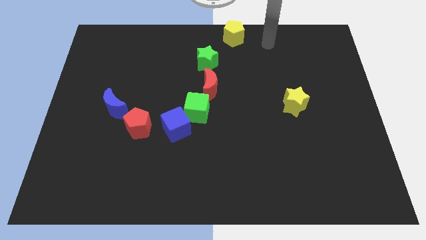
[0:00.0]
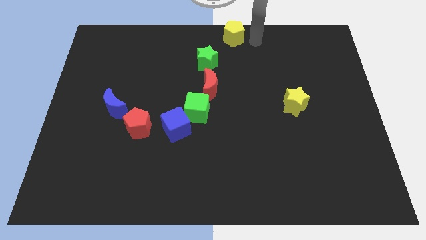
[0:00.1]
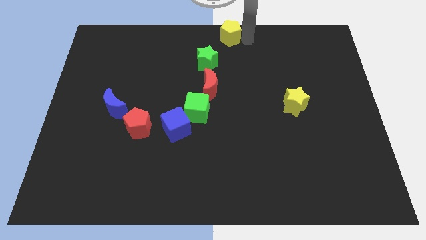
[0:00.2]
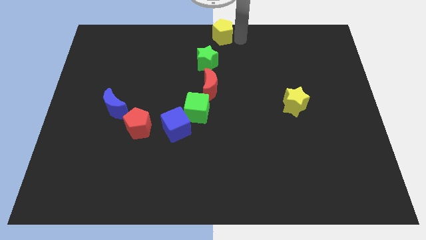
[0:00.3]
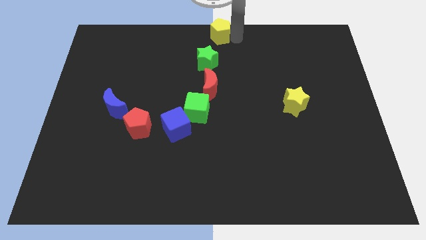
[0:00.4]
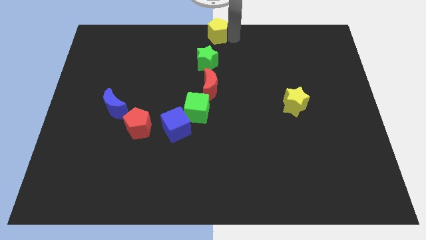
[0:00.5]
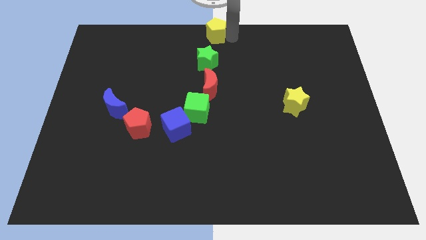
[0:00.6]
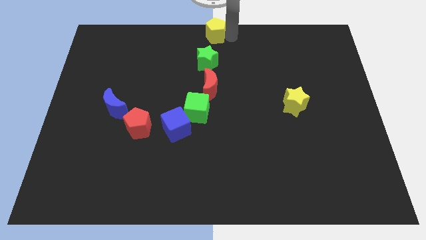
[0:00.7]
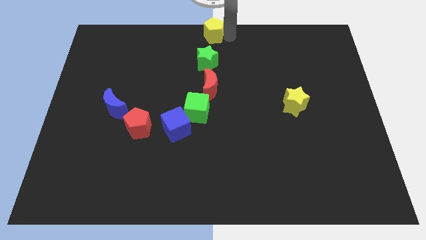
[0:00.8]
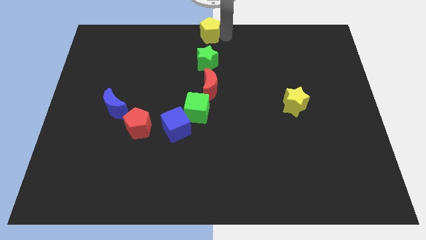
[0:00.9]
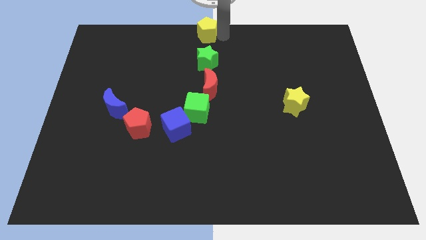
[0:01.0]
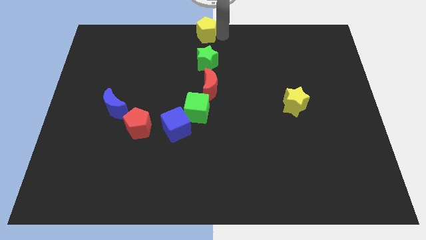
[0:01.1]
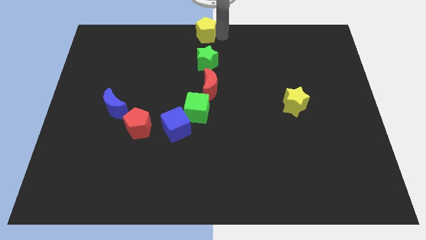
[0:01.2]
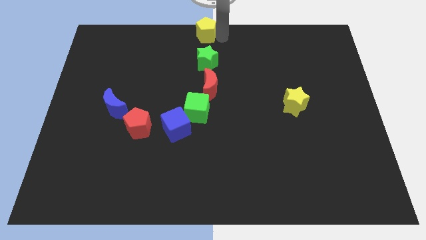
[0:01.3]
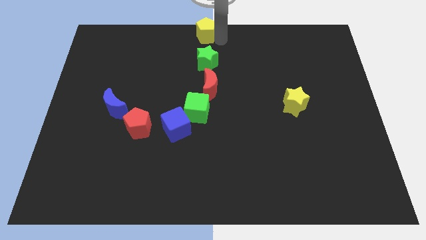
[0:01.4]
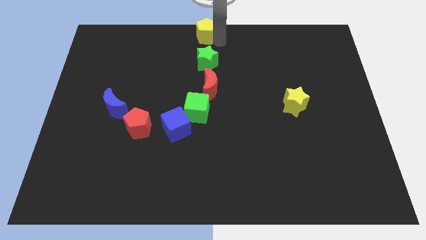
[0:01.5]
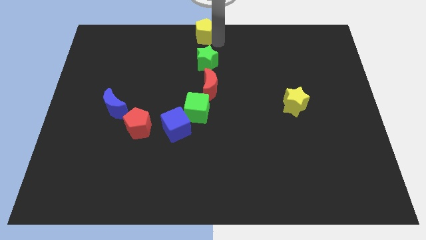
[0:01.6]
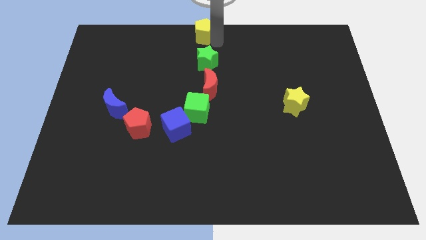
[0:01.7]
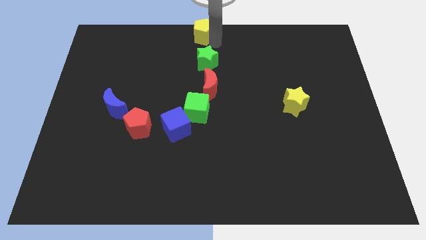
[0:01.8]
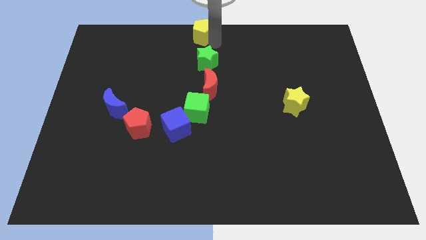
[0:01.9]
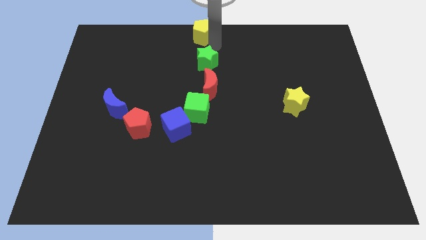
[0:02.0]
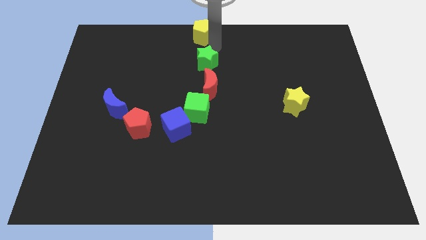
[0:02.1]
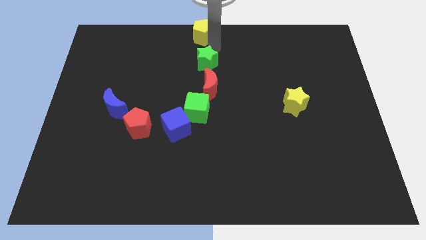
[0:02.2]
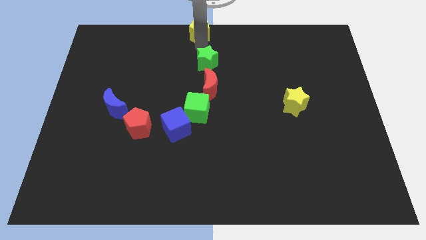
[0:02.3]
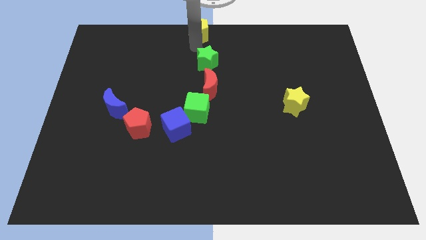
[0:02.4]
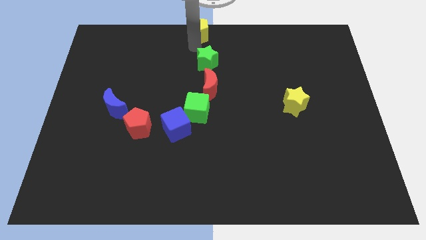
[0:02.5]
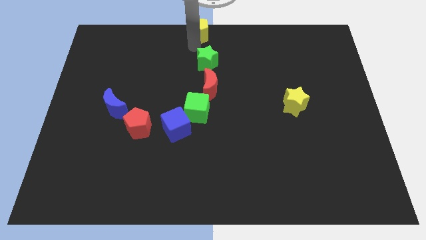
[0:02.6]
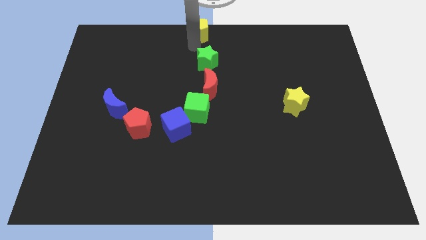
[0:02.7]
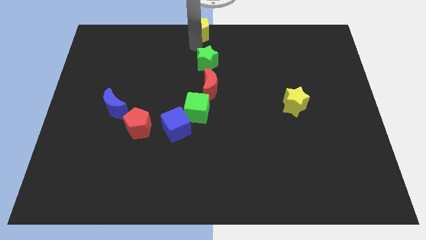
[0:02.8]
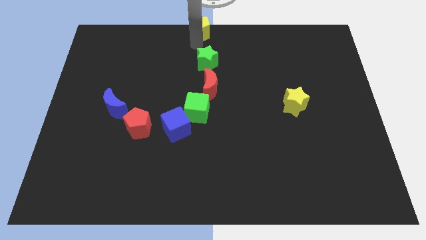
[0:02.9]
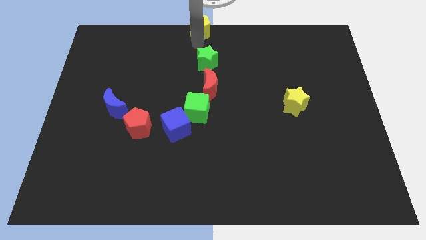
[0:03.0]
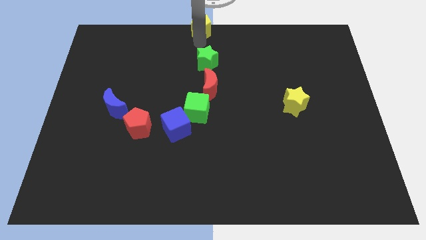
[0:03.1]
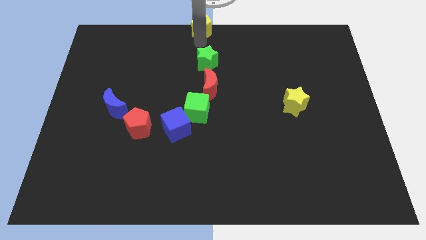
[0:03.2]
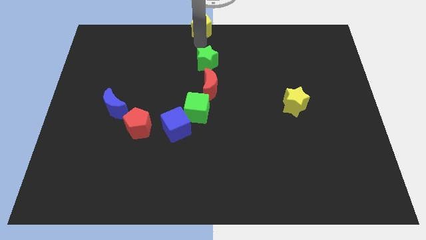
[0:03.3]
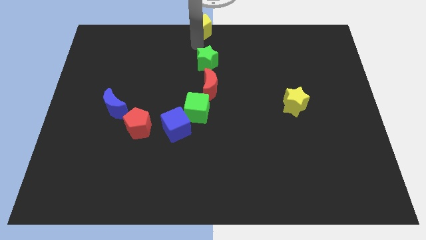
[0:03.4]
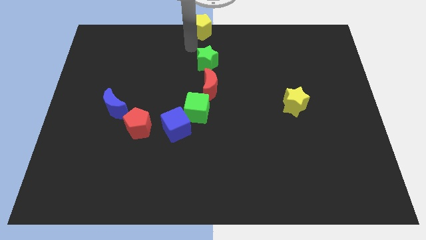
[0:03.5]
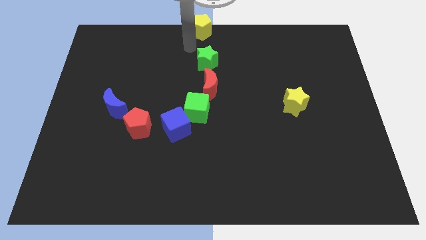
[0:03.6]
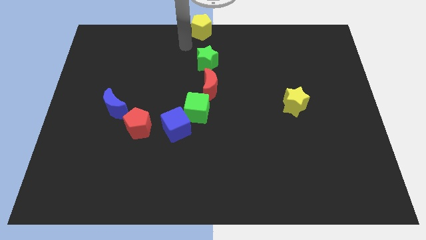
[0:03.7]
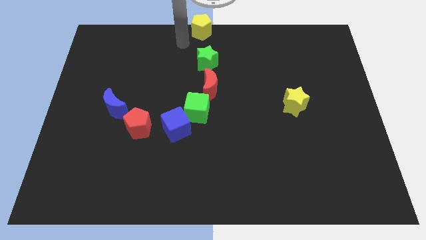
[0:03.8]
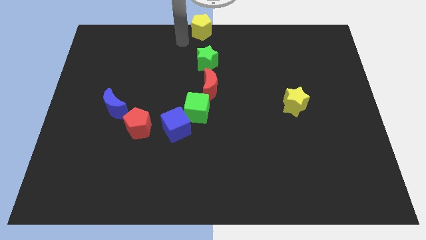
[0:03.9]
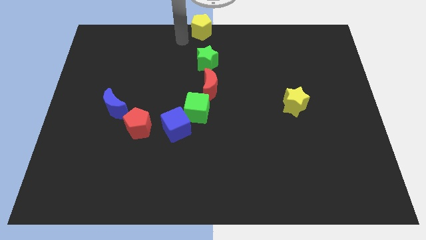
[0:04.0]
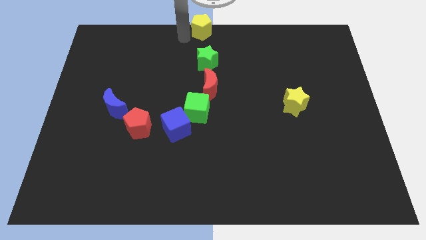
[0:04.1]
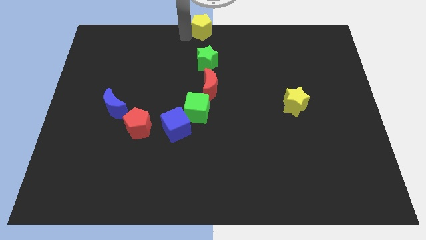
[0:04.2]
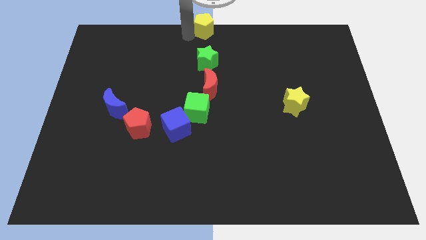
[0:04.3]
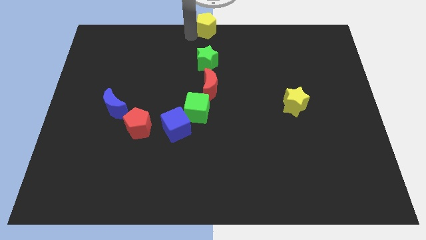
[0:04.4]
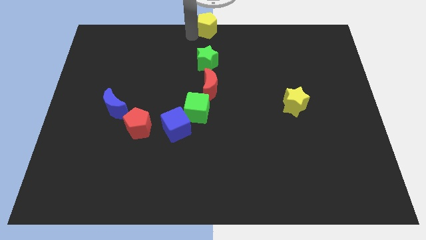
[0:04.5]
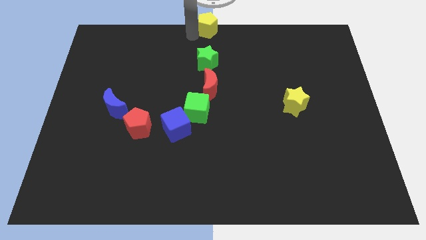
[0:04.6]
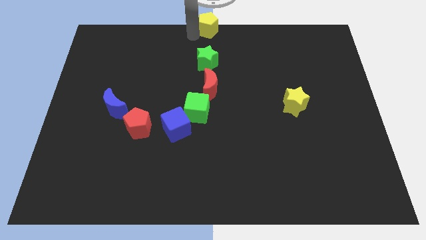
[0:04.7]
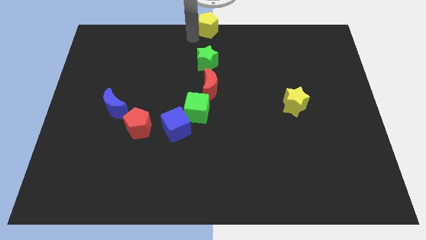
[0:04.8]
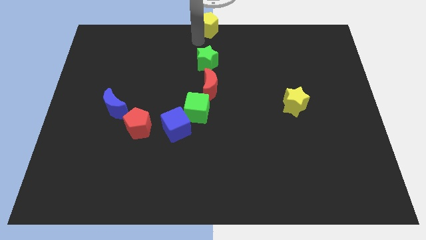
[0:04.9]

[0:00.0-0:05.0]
move the yellow pentagon top center of the board

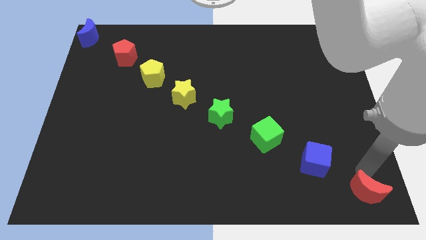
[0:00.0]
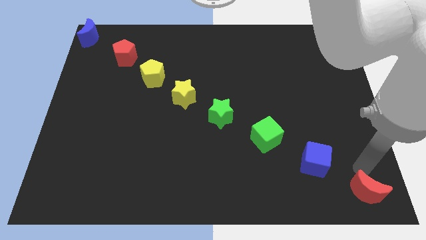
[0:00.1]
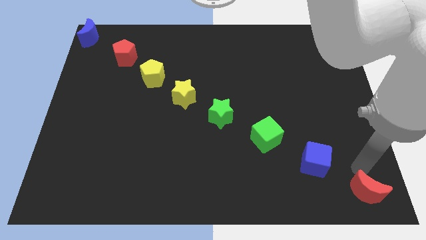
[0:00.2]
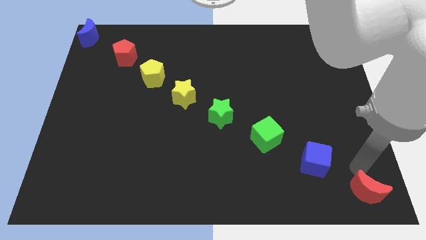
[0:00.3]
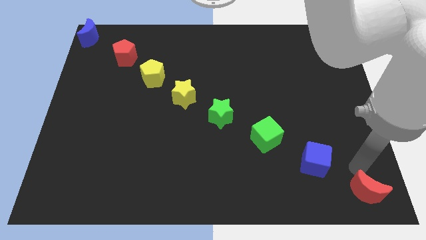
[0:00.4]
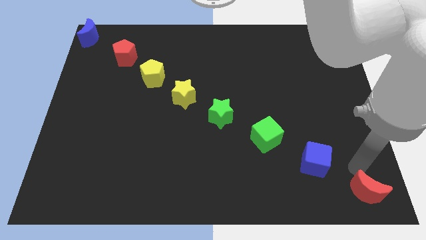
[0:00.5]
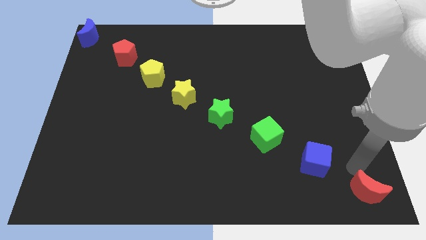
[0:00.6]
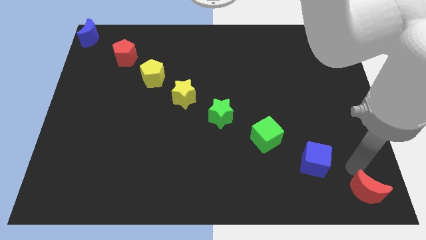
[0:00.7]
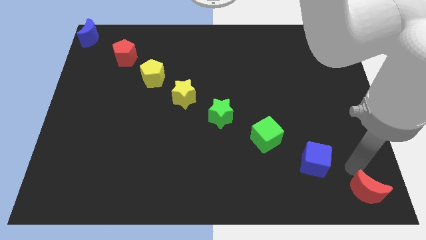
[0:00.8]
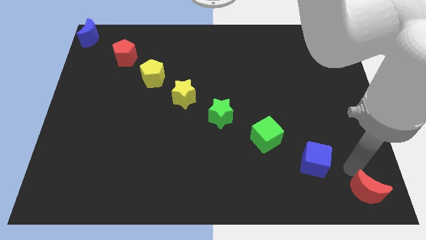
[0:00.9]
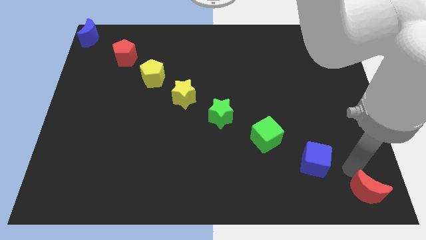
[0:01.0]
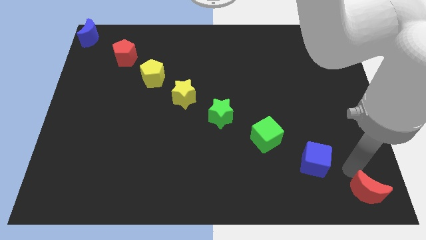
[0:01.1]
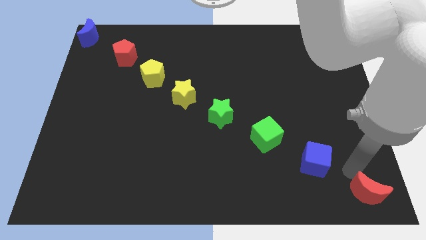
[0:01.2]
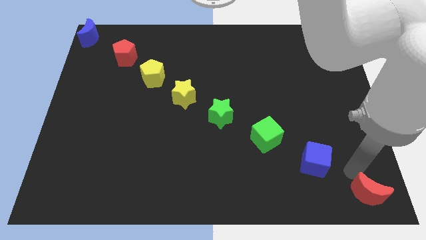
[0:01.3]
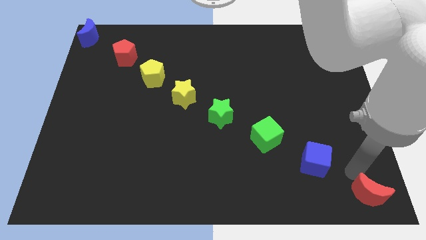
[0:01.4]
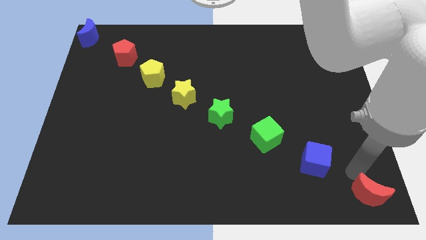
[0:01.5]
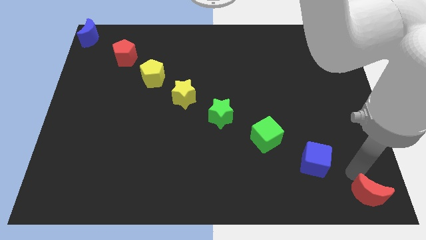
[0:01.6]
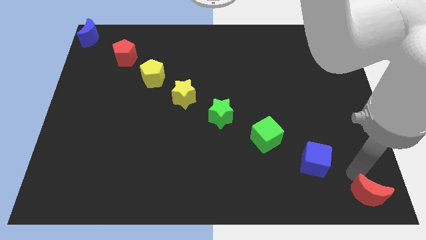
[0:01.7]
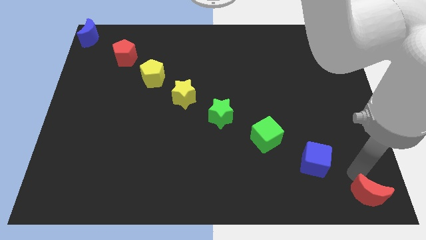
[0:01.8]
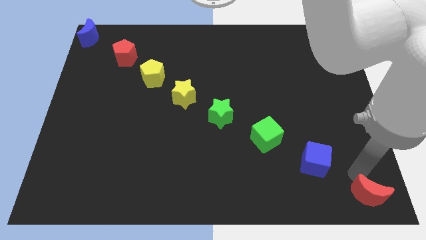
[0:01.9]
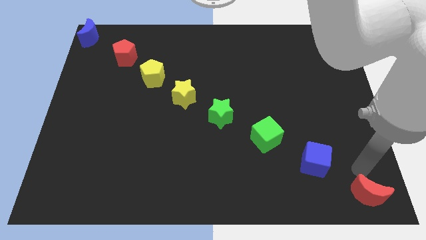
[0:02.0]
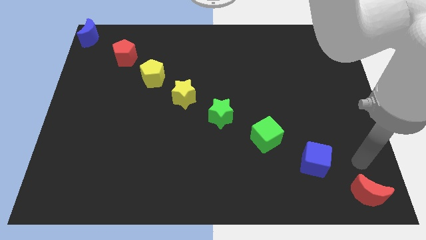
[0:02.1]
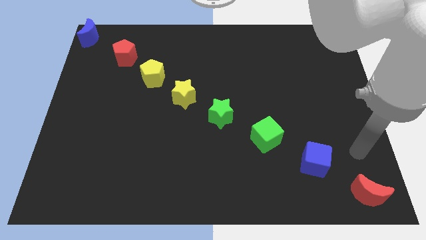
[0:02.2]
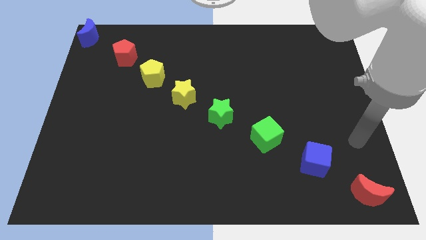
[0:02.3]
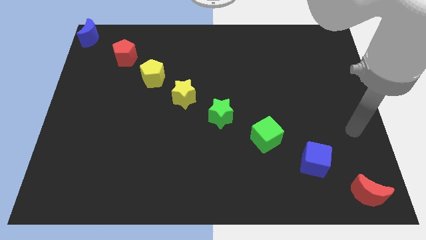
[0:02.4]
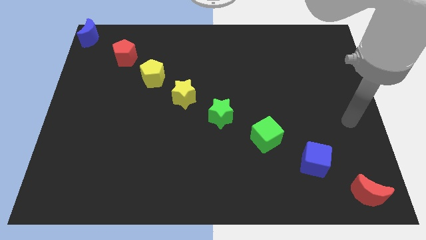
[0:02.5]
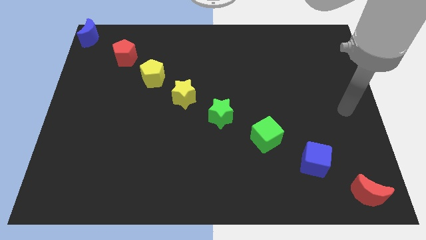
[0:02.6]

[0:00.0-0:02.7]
slightly push the red crescent to the bottom right

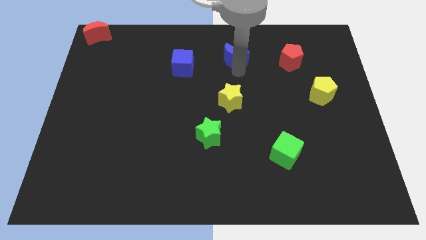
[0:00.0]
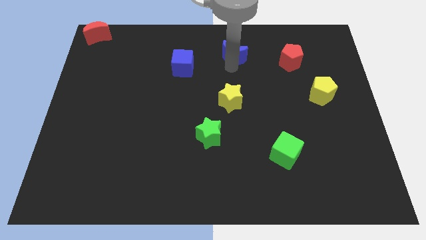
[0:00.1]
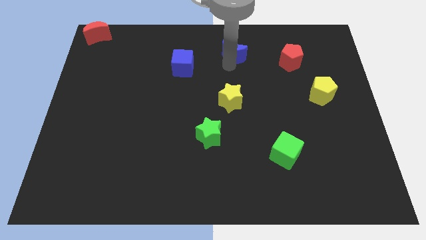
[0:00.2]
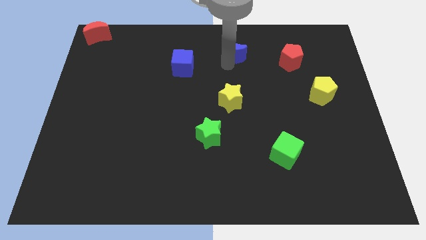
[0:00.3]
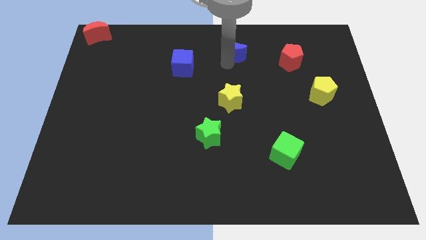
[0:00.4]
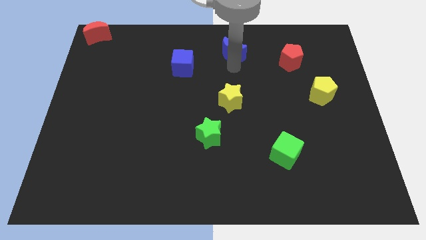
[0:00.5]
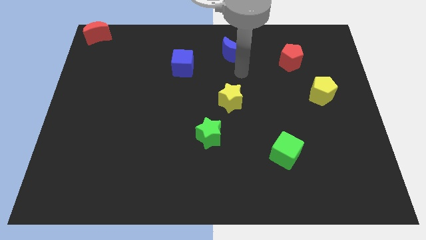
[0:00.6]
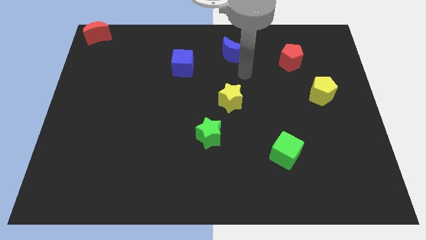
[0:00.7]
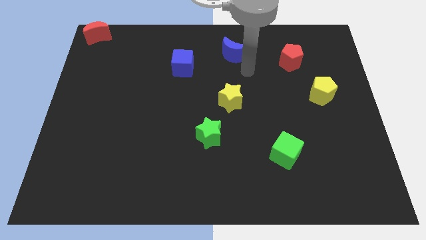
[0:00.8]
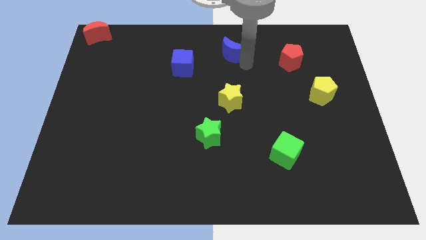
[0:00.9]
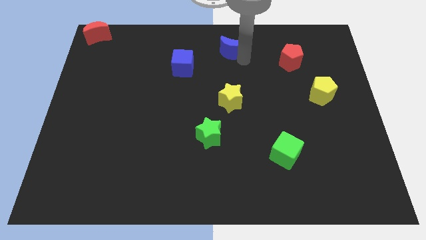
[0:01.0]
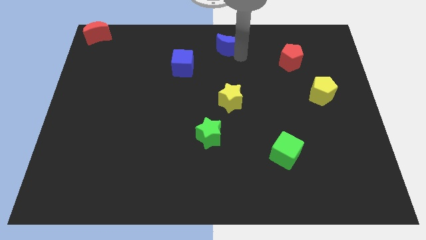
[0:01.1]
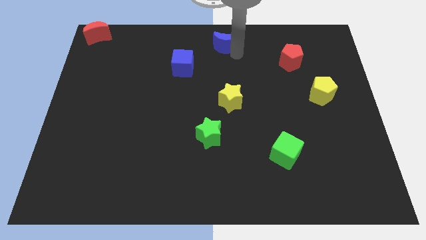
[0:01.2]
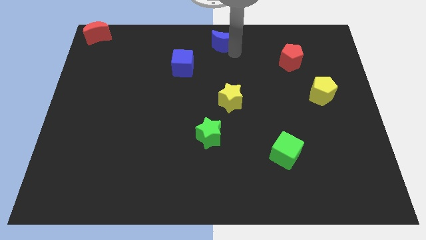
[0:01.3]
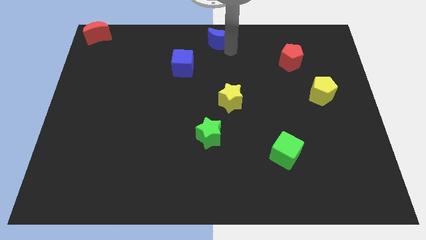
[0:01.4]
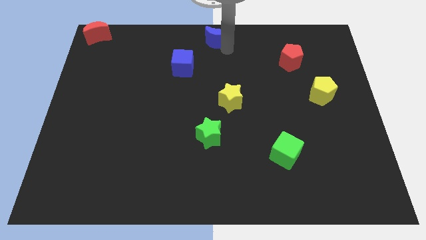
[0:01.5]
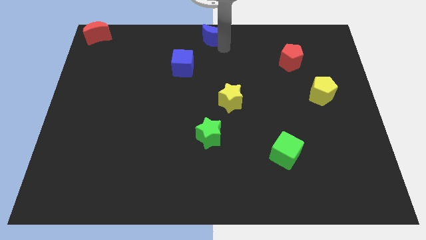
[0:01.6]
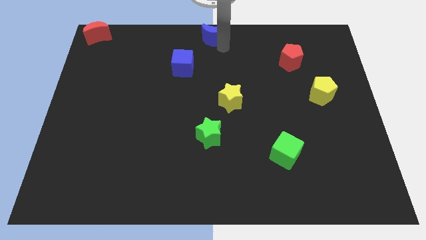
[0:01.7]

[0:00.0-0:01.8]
put the blue moon at the top center of the board
